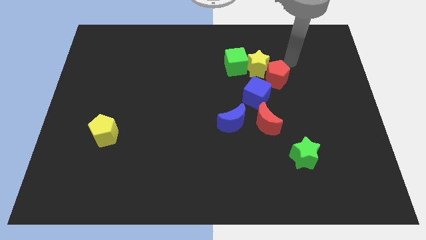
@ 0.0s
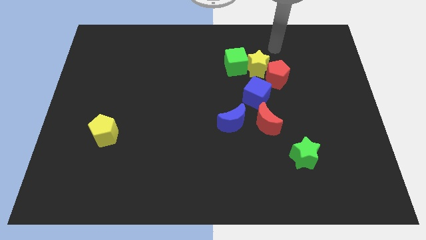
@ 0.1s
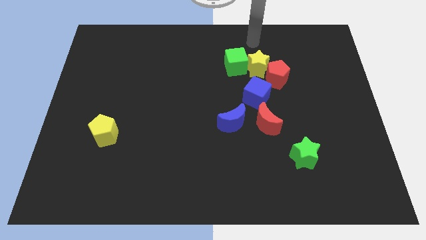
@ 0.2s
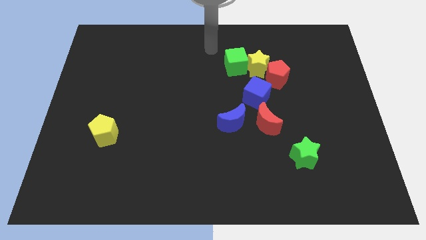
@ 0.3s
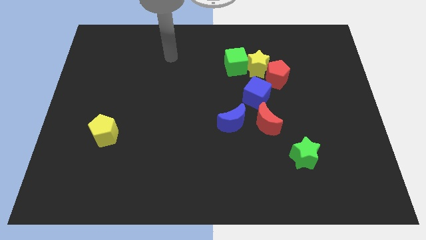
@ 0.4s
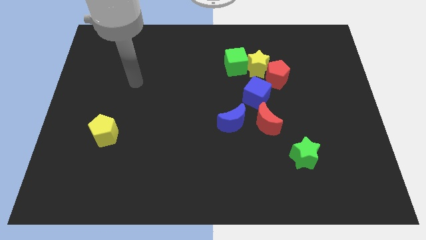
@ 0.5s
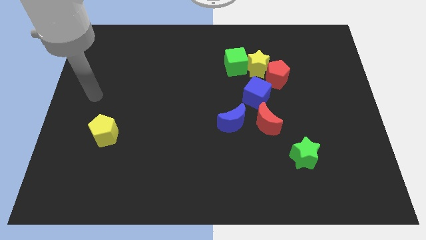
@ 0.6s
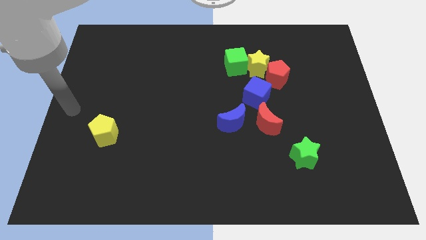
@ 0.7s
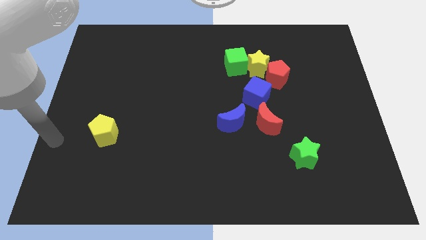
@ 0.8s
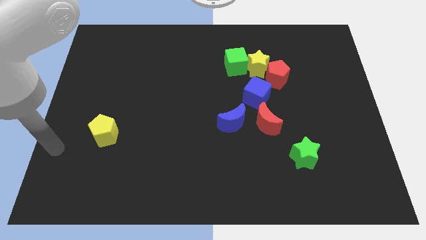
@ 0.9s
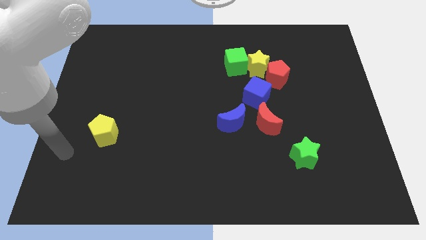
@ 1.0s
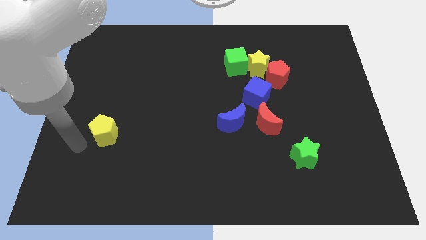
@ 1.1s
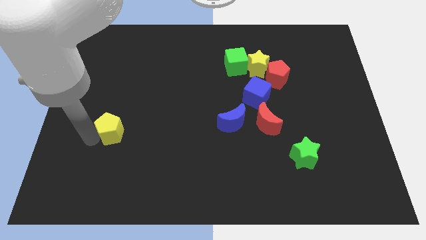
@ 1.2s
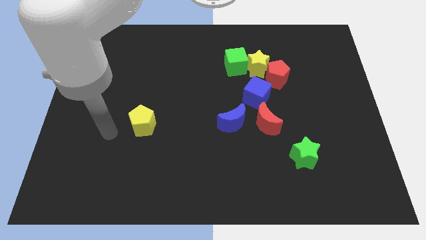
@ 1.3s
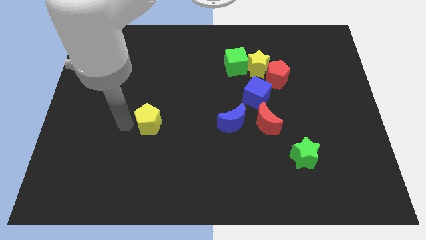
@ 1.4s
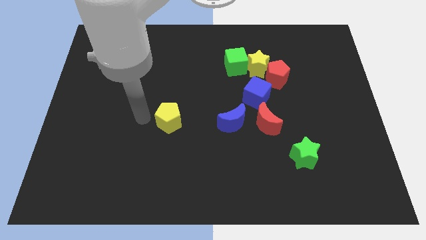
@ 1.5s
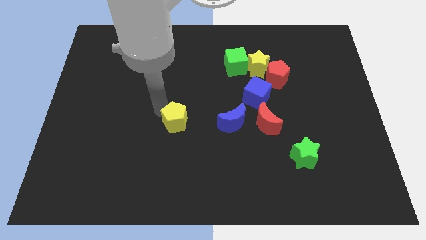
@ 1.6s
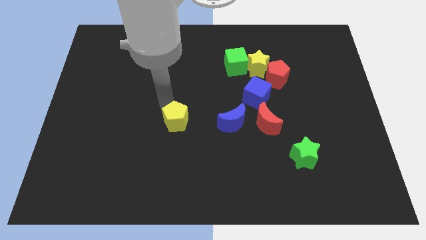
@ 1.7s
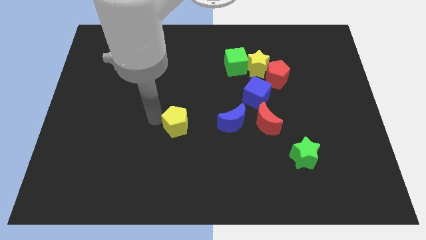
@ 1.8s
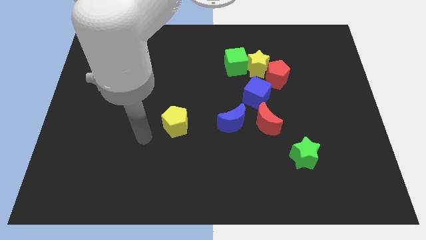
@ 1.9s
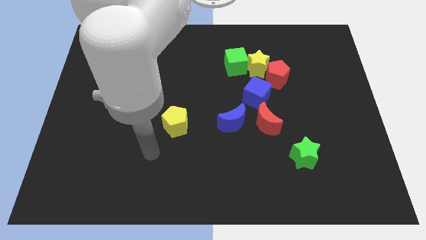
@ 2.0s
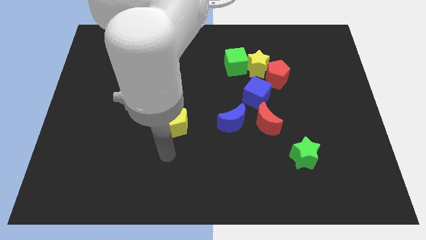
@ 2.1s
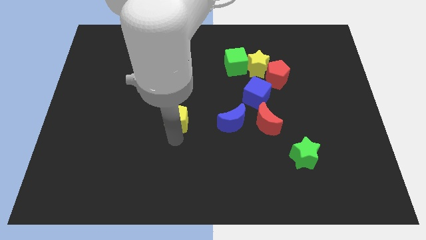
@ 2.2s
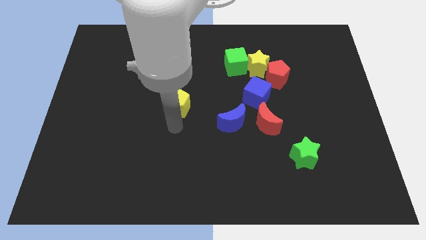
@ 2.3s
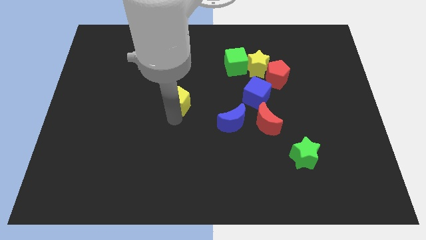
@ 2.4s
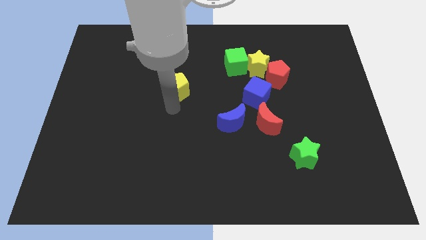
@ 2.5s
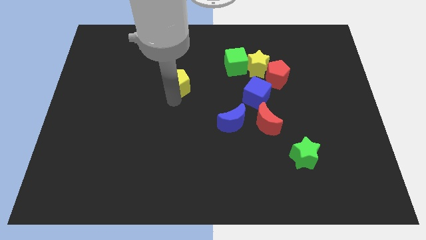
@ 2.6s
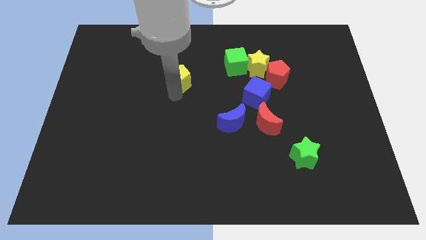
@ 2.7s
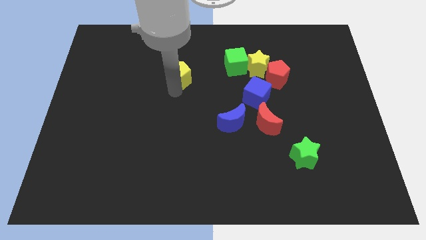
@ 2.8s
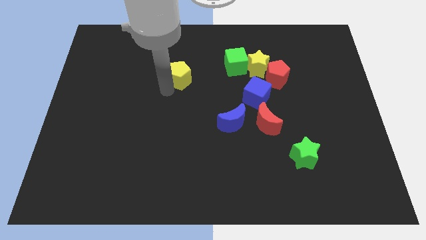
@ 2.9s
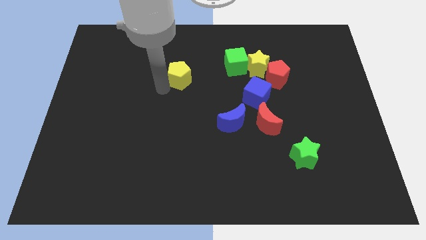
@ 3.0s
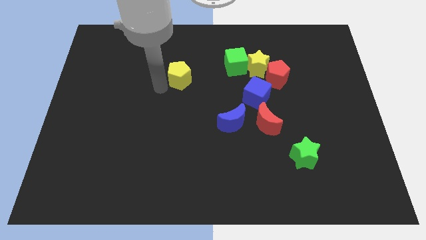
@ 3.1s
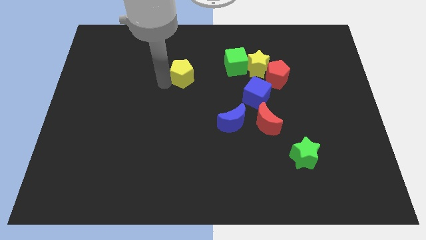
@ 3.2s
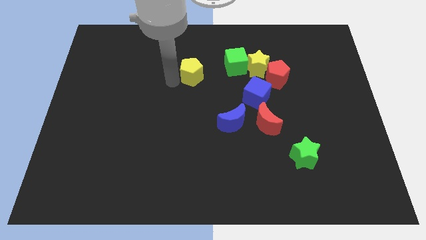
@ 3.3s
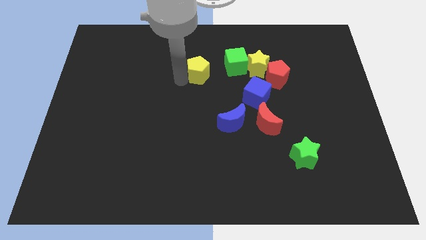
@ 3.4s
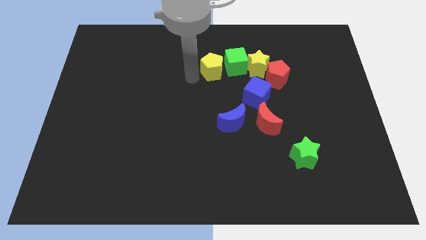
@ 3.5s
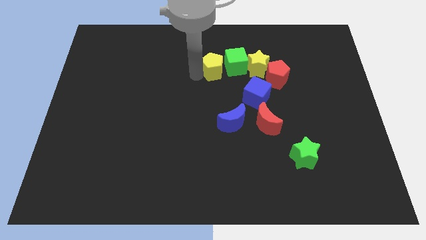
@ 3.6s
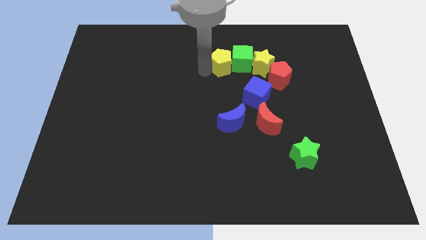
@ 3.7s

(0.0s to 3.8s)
move the yellow pentagon to the green cube

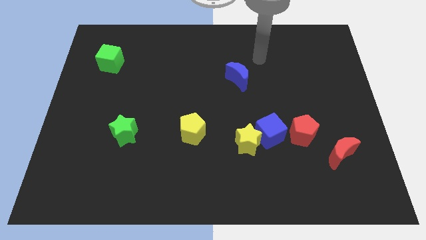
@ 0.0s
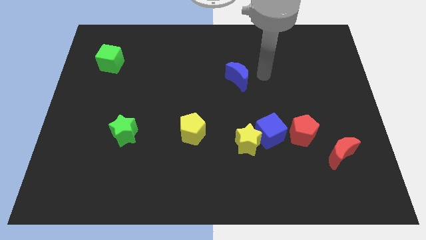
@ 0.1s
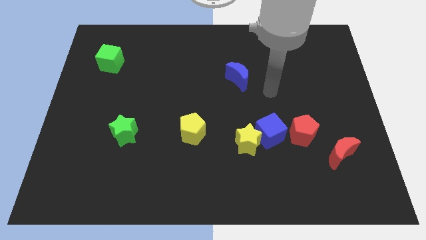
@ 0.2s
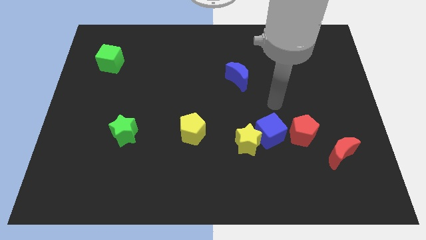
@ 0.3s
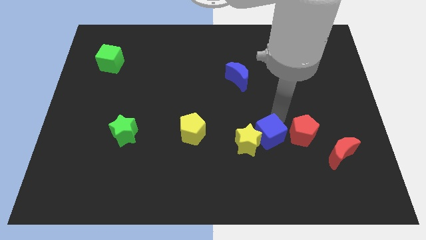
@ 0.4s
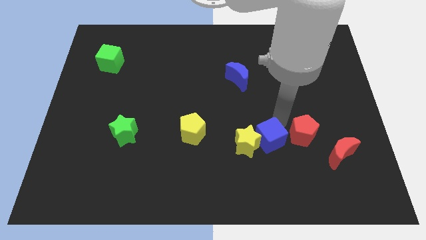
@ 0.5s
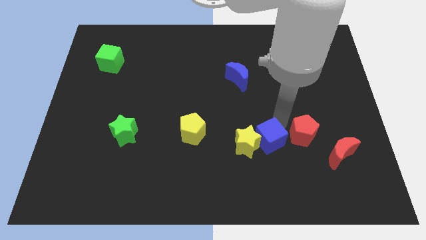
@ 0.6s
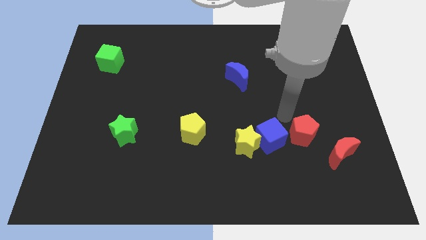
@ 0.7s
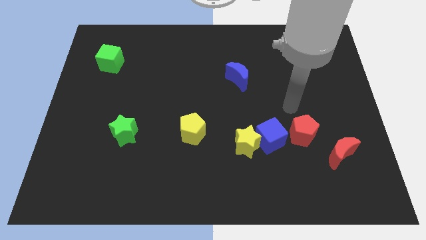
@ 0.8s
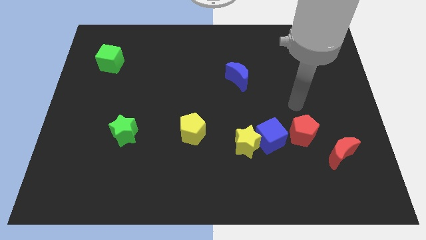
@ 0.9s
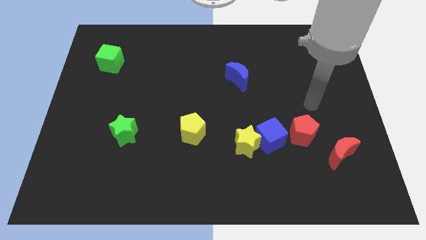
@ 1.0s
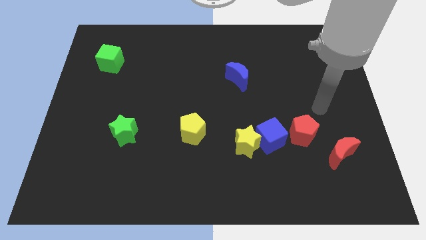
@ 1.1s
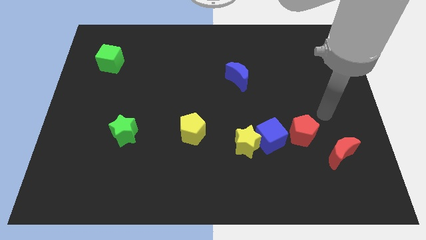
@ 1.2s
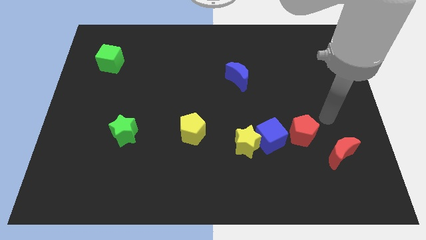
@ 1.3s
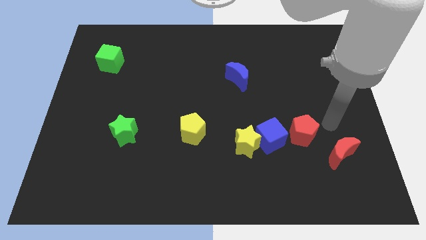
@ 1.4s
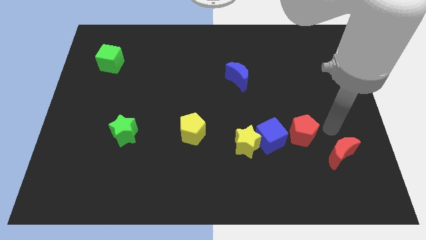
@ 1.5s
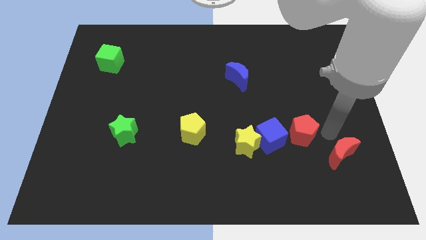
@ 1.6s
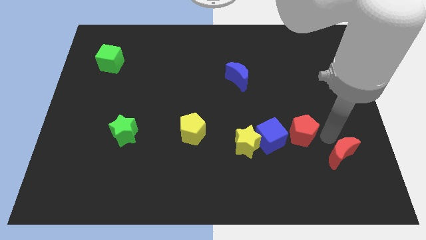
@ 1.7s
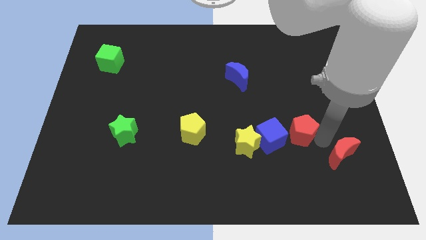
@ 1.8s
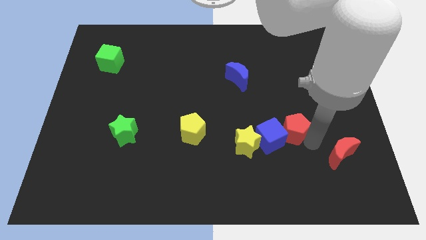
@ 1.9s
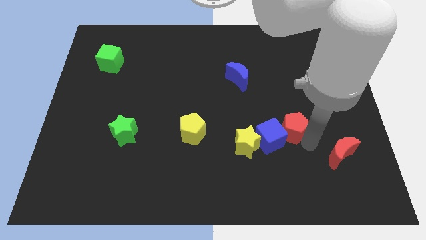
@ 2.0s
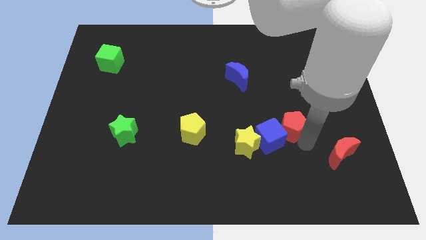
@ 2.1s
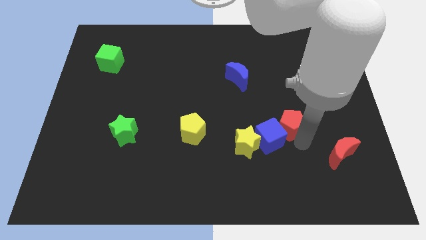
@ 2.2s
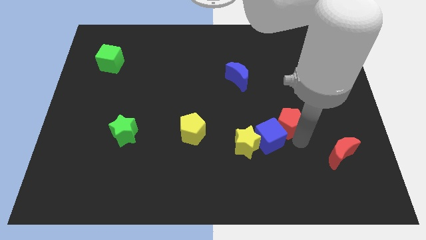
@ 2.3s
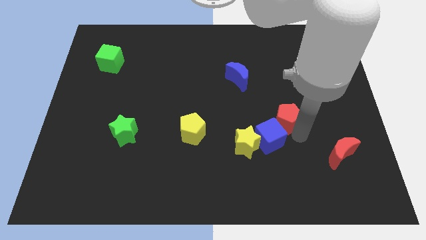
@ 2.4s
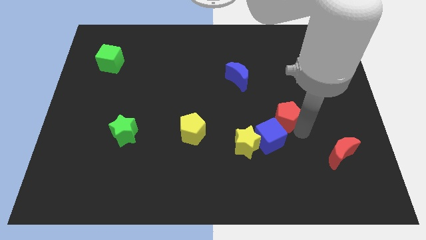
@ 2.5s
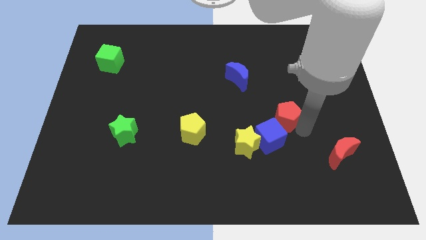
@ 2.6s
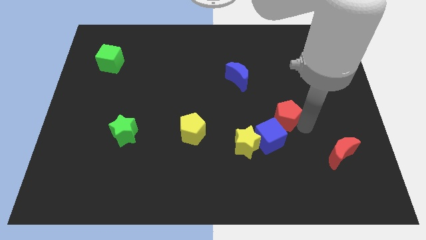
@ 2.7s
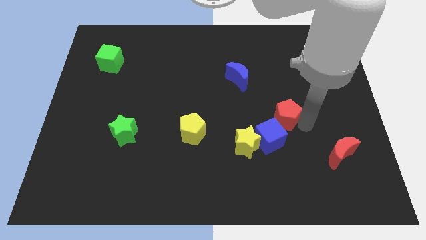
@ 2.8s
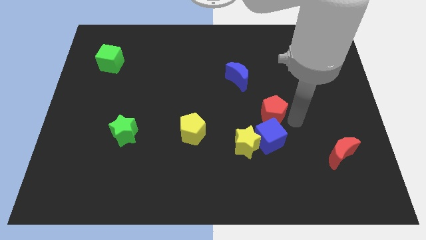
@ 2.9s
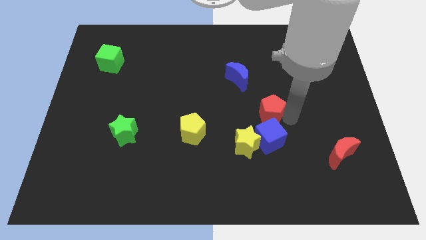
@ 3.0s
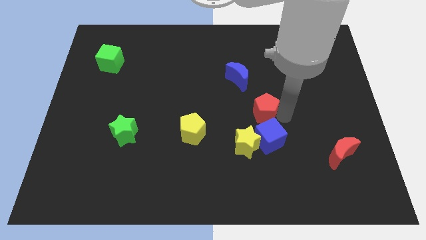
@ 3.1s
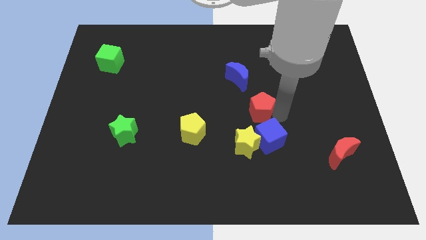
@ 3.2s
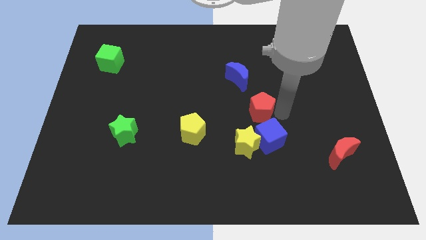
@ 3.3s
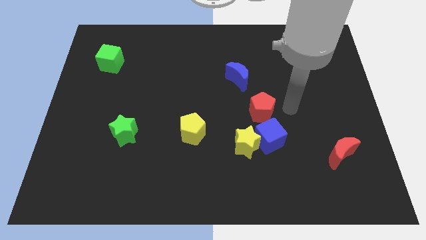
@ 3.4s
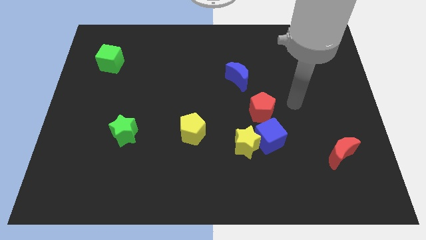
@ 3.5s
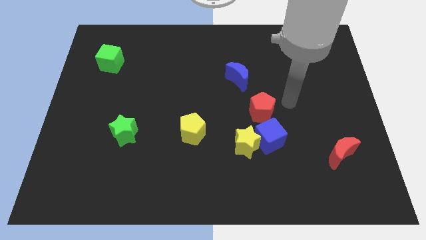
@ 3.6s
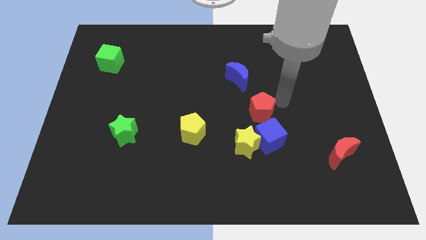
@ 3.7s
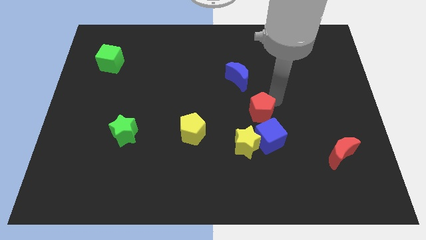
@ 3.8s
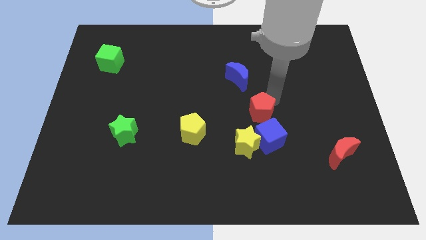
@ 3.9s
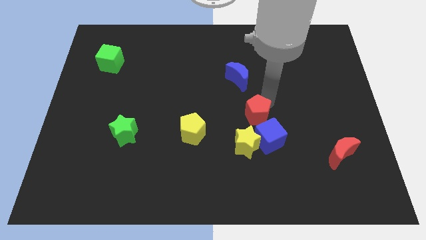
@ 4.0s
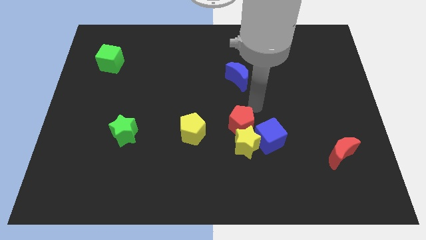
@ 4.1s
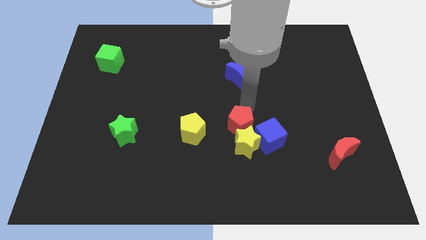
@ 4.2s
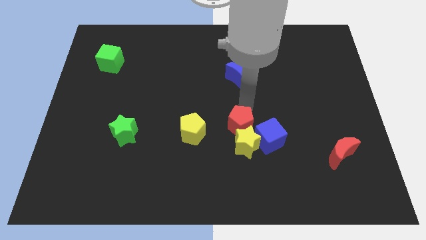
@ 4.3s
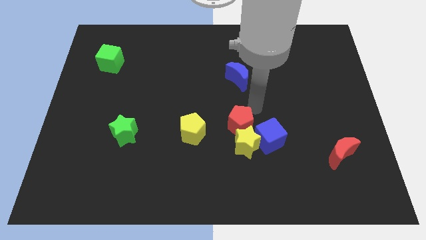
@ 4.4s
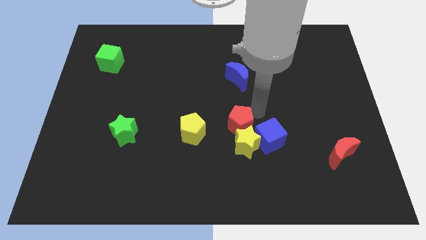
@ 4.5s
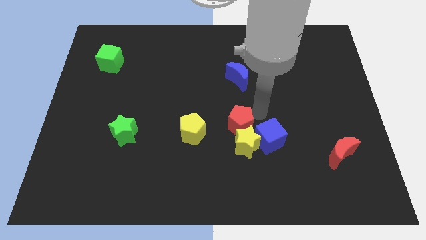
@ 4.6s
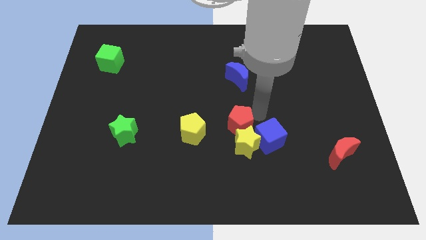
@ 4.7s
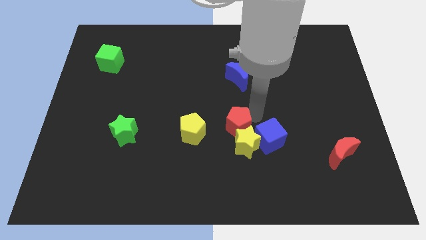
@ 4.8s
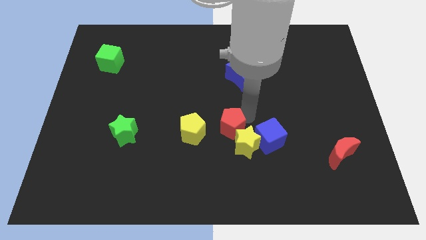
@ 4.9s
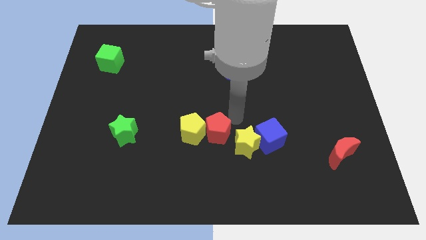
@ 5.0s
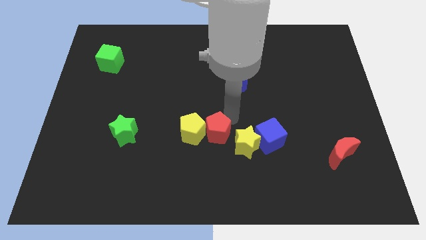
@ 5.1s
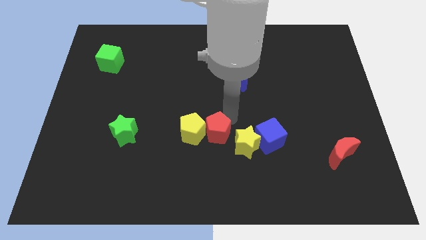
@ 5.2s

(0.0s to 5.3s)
push the red pentagon next to the yellow pentagon
